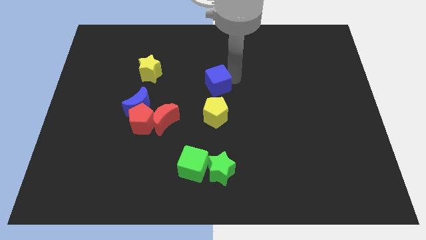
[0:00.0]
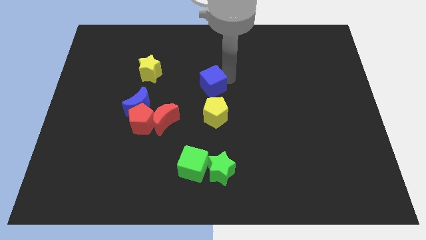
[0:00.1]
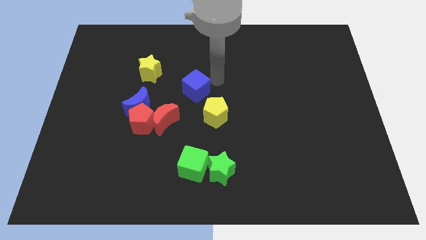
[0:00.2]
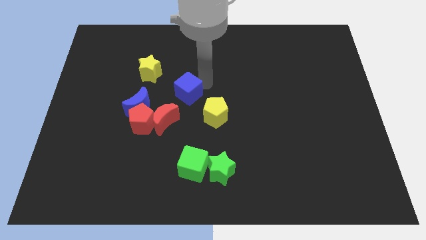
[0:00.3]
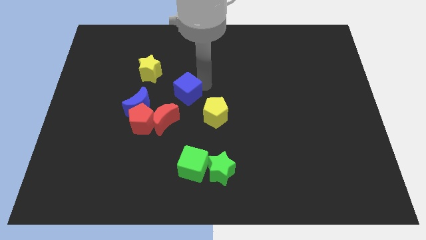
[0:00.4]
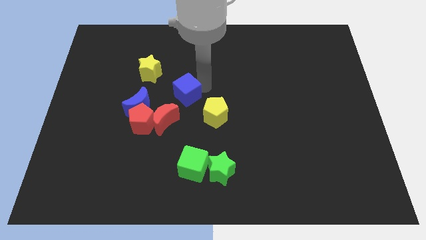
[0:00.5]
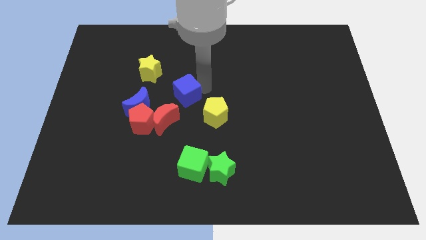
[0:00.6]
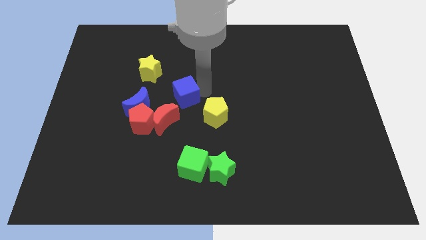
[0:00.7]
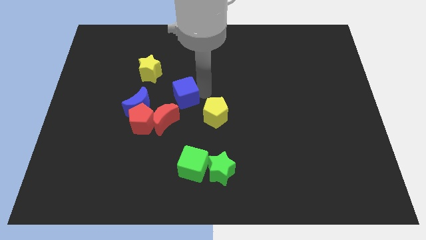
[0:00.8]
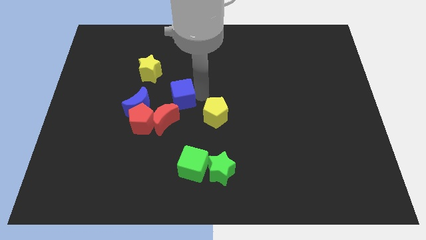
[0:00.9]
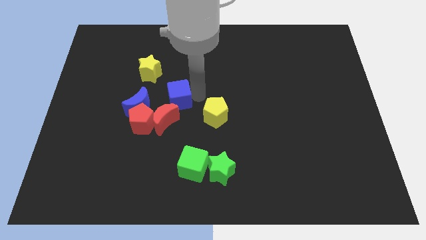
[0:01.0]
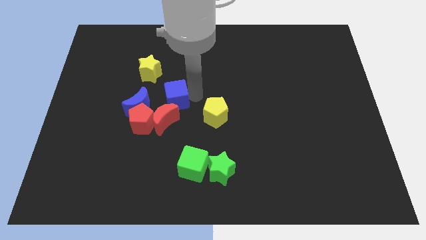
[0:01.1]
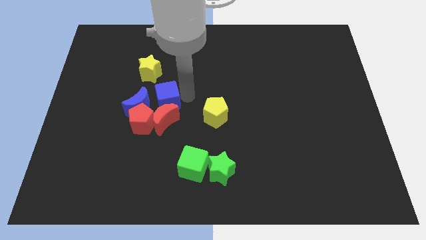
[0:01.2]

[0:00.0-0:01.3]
put the blue cube vertically above the red moon

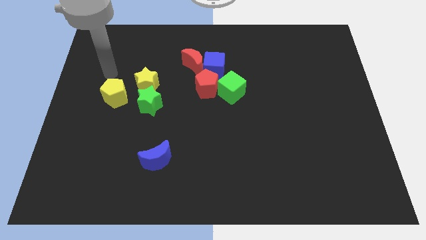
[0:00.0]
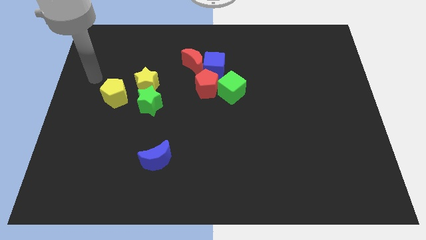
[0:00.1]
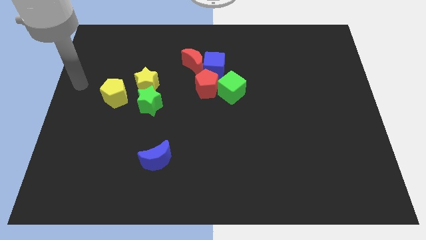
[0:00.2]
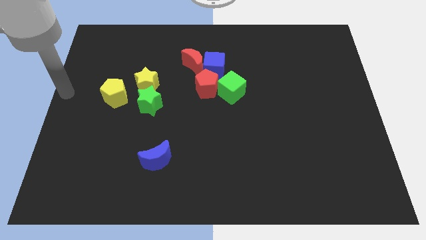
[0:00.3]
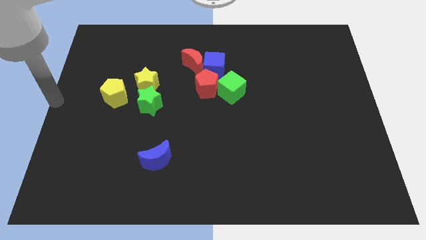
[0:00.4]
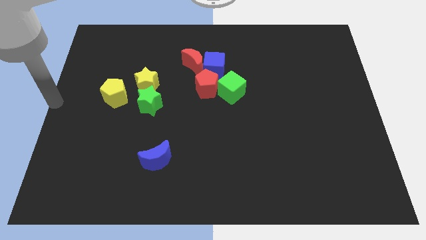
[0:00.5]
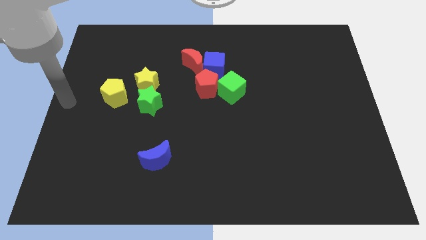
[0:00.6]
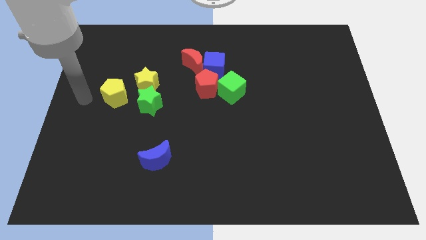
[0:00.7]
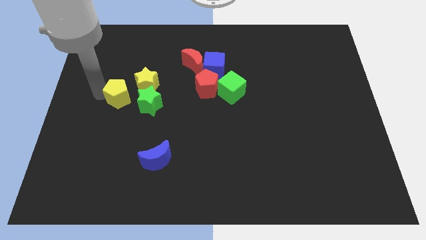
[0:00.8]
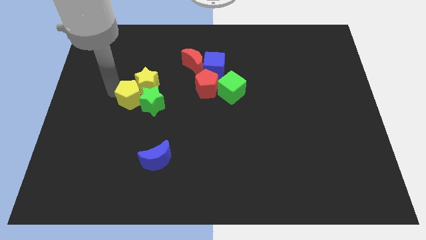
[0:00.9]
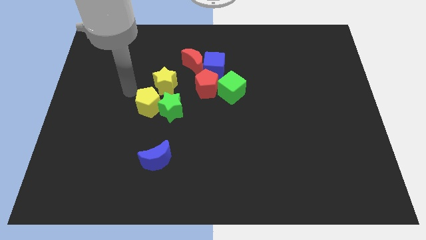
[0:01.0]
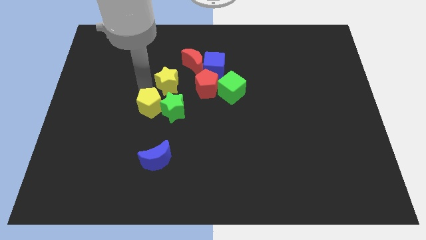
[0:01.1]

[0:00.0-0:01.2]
move the yellow pentagon towards the green star

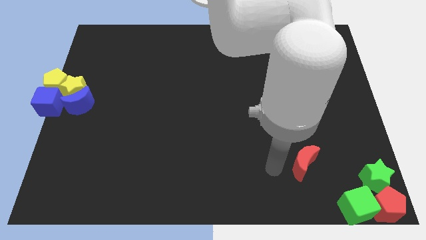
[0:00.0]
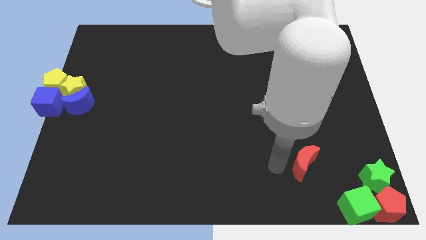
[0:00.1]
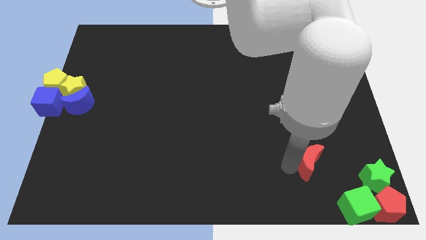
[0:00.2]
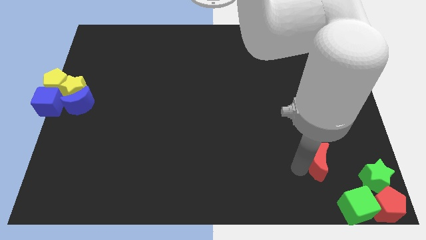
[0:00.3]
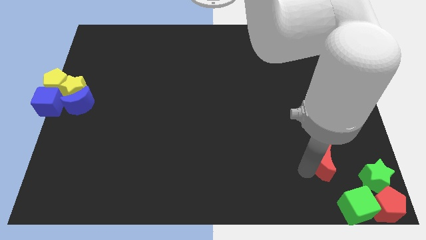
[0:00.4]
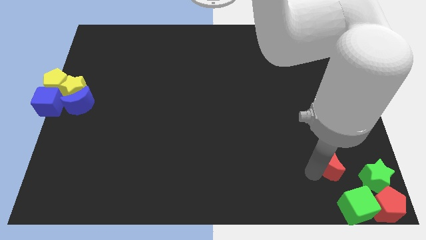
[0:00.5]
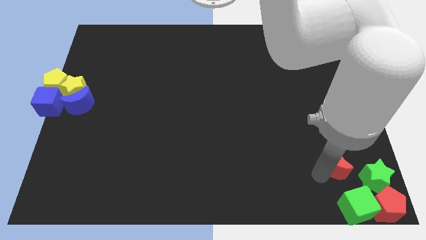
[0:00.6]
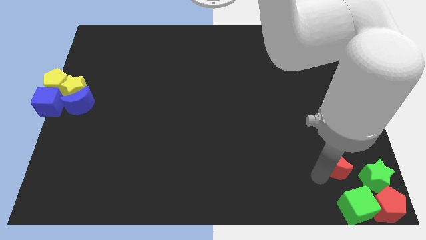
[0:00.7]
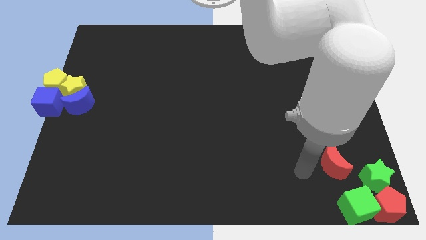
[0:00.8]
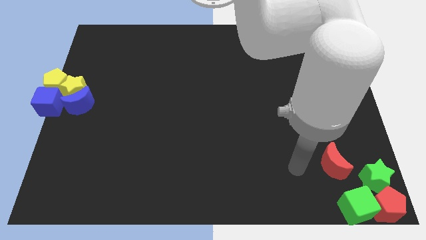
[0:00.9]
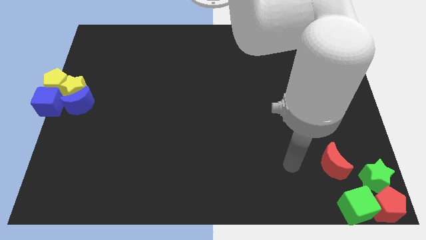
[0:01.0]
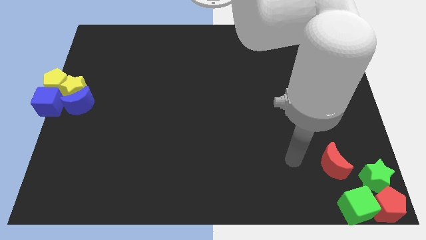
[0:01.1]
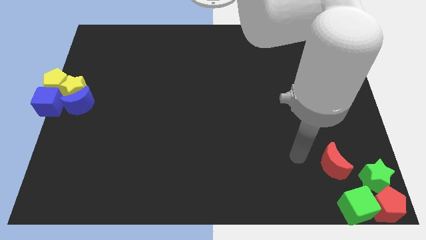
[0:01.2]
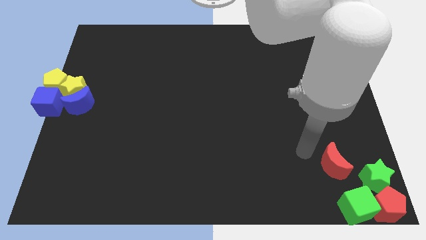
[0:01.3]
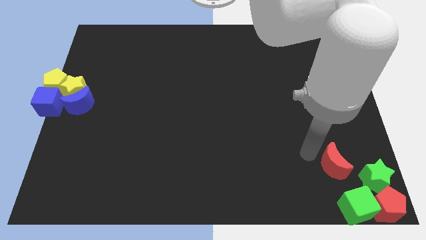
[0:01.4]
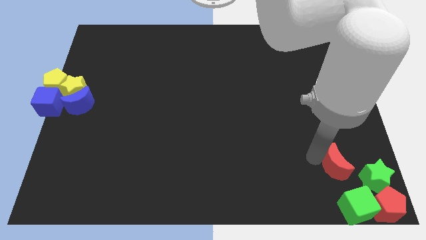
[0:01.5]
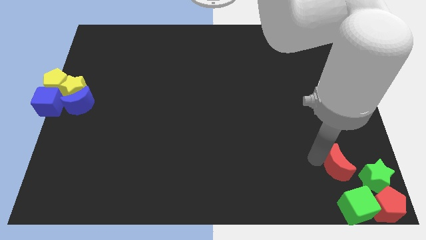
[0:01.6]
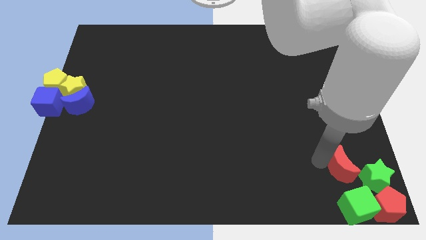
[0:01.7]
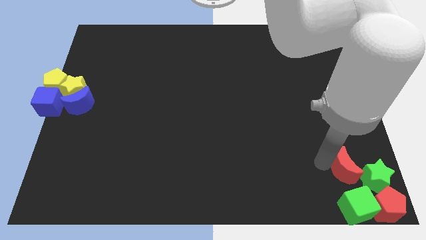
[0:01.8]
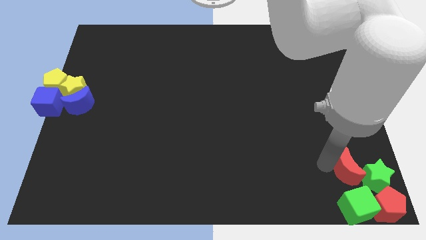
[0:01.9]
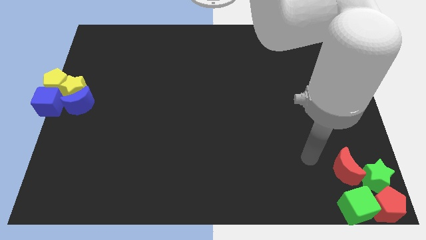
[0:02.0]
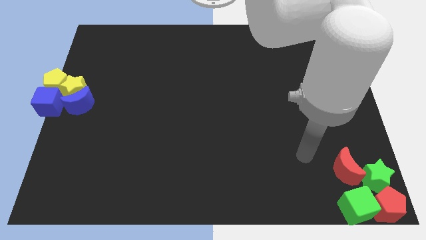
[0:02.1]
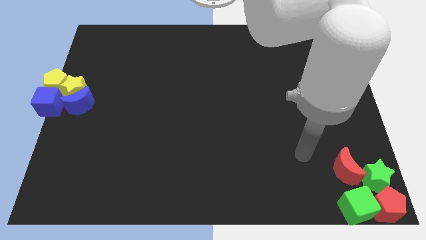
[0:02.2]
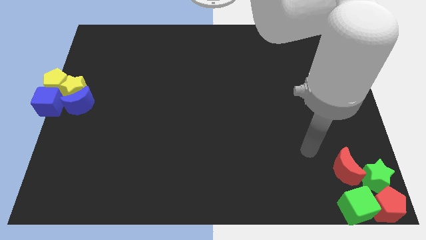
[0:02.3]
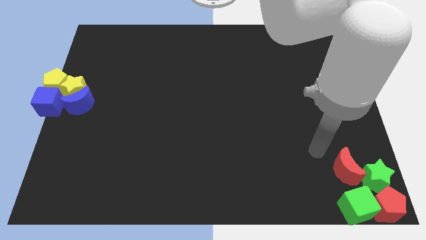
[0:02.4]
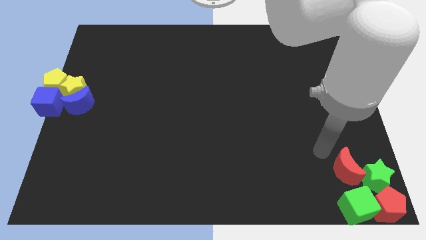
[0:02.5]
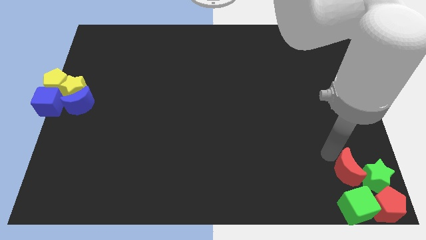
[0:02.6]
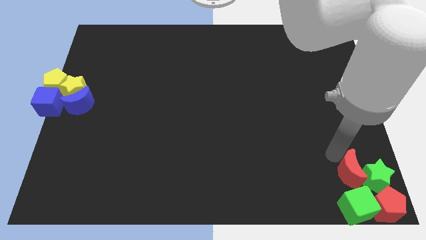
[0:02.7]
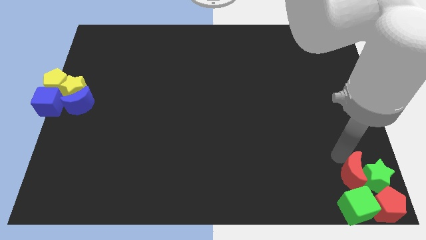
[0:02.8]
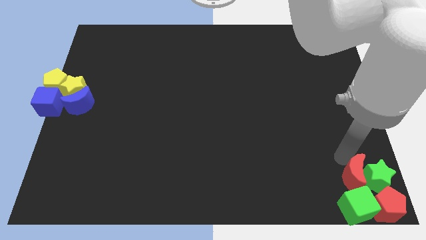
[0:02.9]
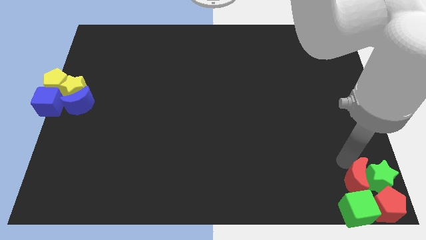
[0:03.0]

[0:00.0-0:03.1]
place the red moon on the top of the green cube

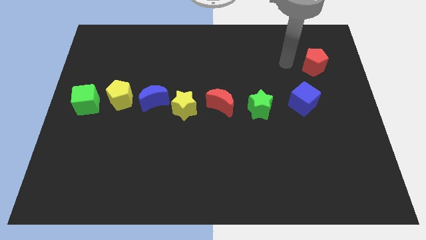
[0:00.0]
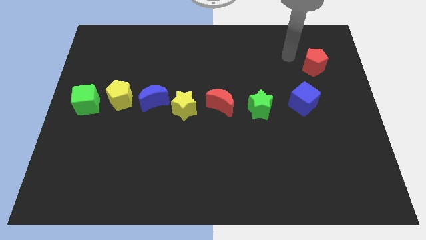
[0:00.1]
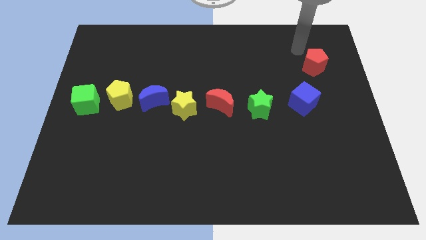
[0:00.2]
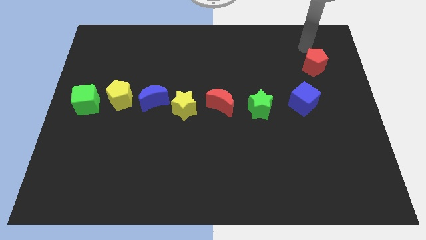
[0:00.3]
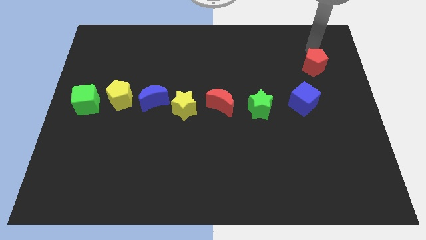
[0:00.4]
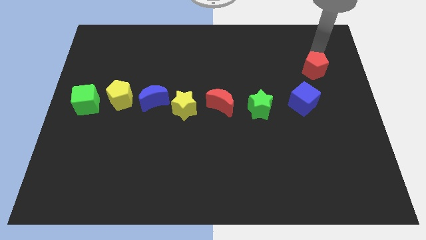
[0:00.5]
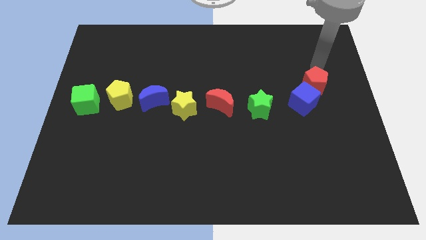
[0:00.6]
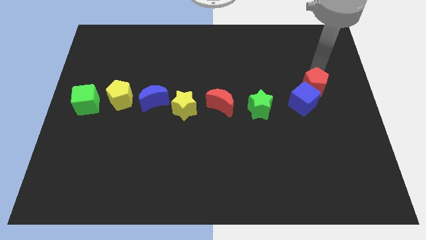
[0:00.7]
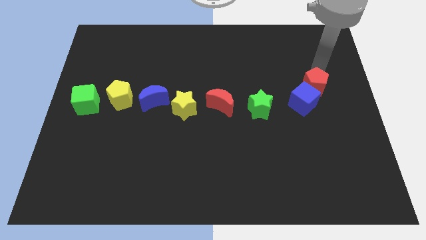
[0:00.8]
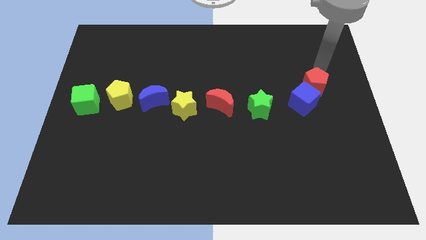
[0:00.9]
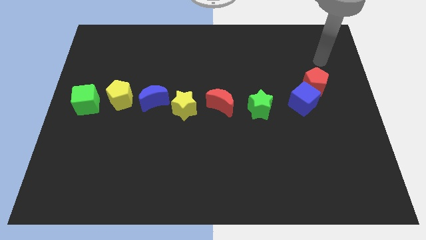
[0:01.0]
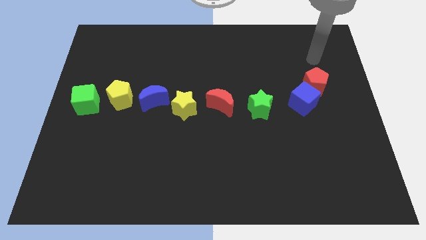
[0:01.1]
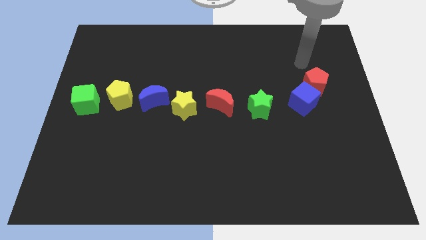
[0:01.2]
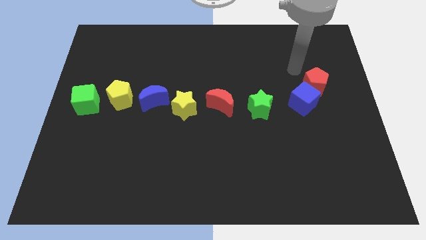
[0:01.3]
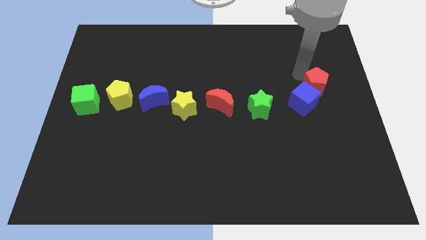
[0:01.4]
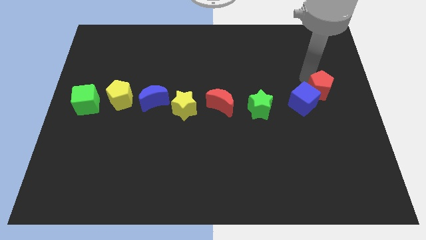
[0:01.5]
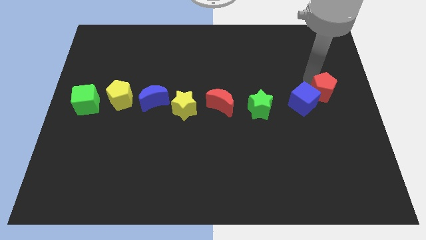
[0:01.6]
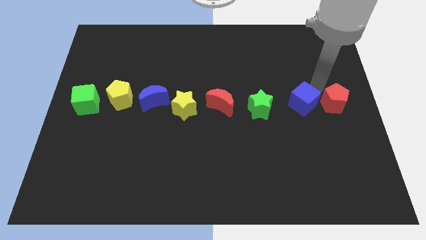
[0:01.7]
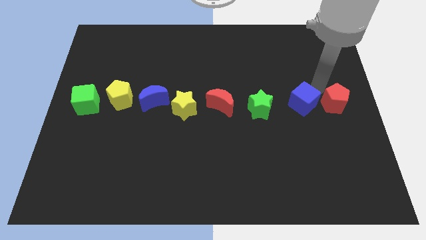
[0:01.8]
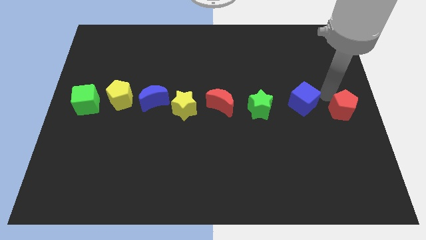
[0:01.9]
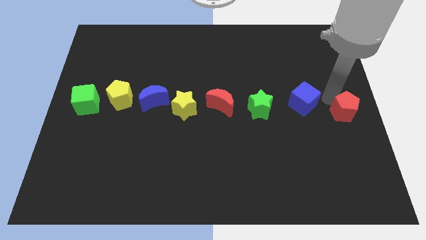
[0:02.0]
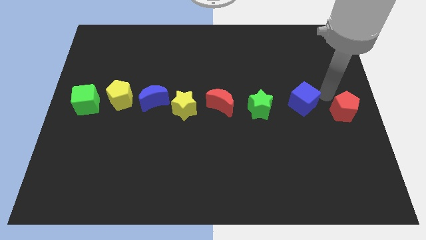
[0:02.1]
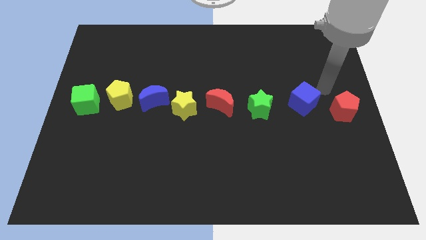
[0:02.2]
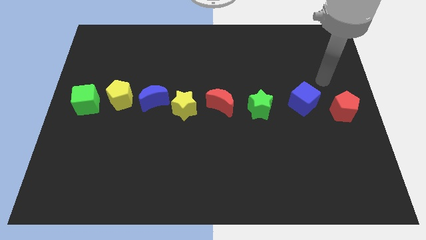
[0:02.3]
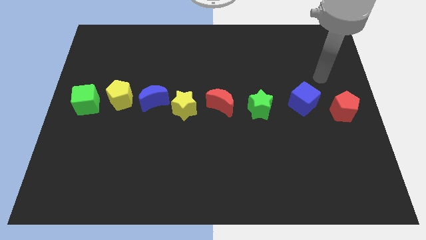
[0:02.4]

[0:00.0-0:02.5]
place red pentagon to the right of blue cube

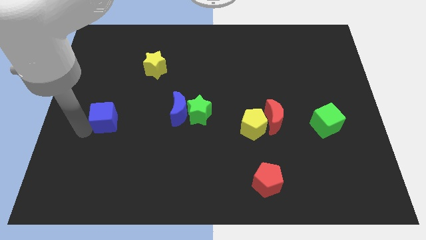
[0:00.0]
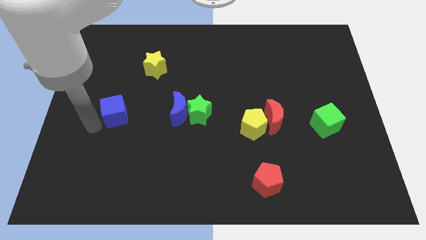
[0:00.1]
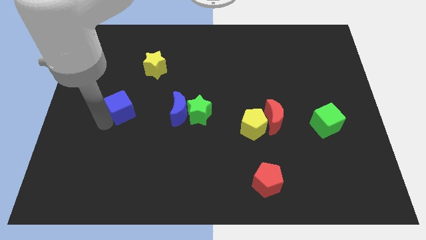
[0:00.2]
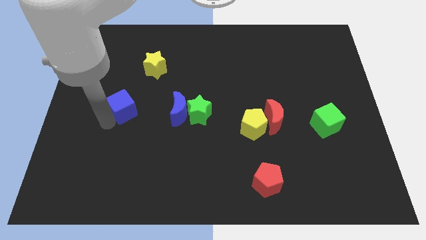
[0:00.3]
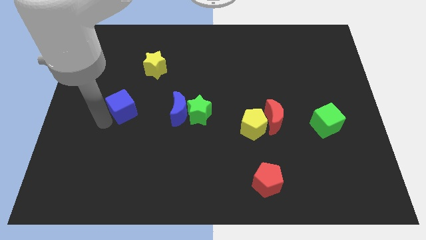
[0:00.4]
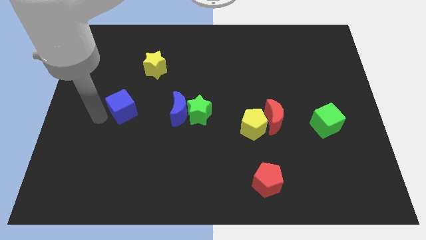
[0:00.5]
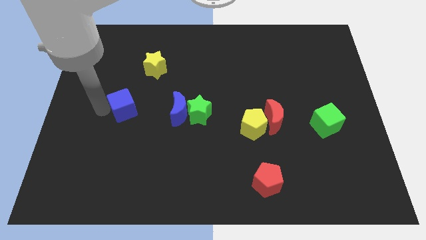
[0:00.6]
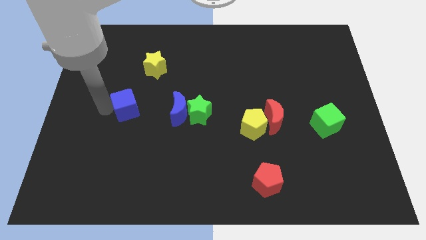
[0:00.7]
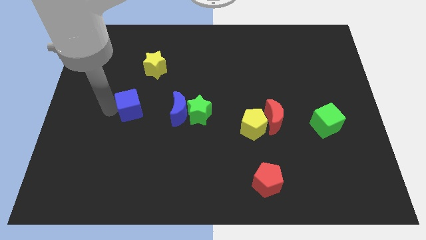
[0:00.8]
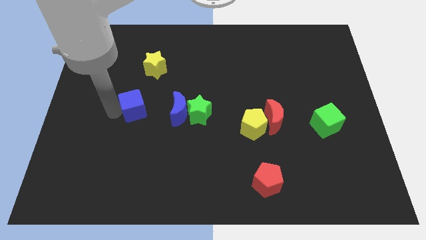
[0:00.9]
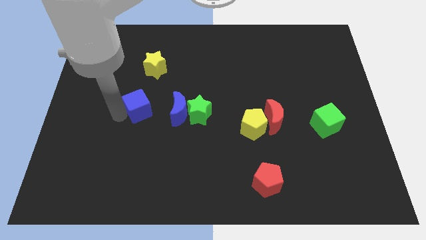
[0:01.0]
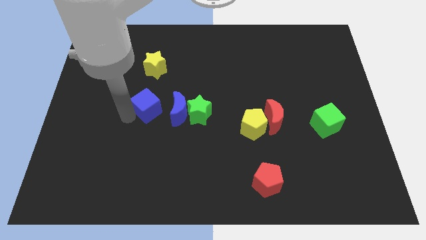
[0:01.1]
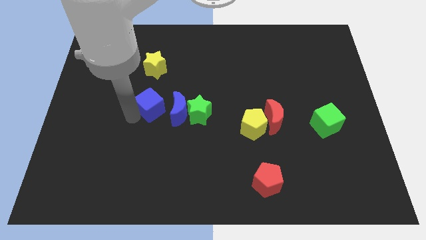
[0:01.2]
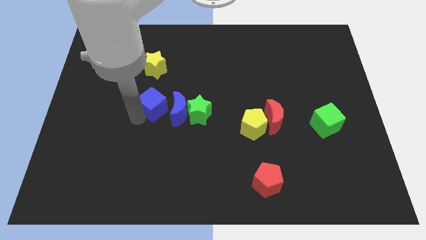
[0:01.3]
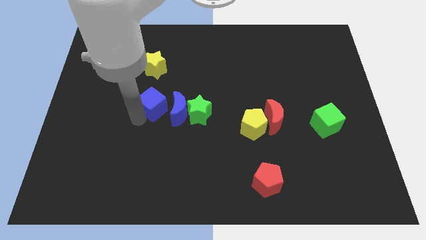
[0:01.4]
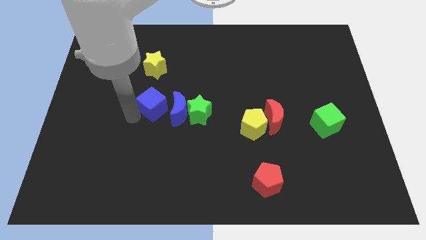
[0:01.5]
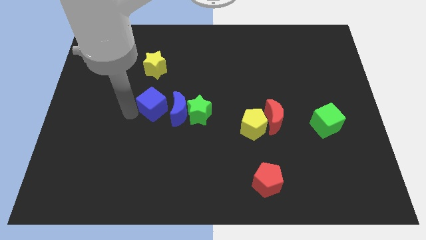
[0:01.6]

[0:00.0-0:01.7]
drag the blue cube close to the blue moon
